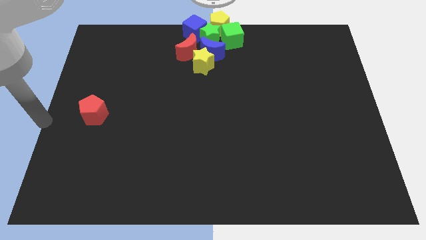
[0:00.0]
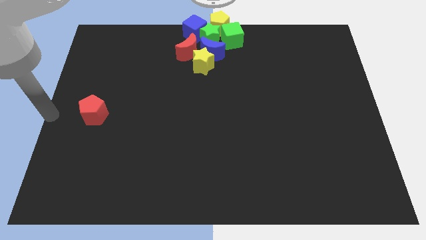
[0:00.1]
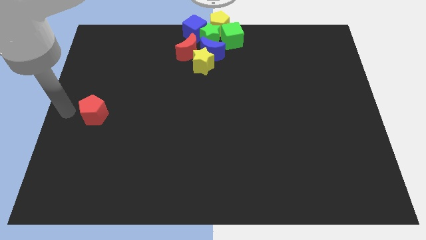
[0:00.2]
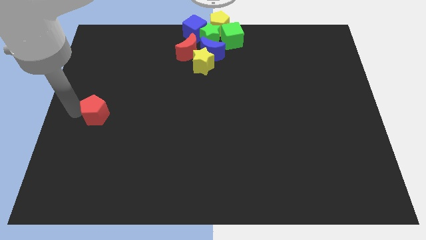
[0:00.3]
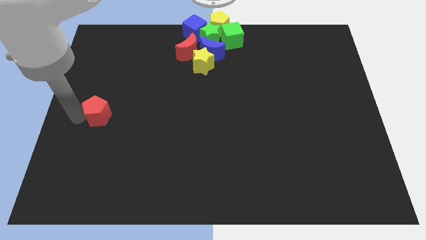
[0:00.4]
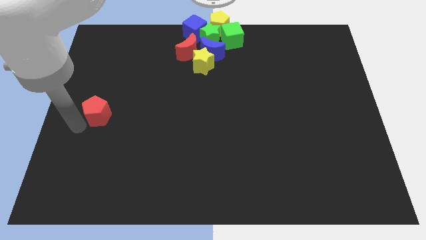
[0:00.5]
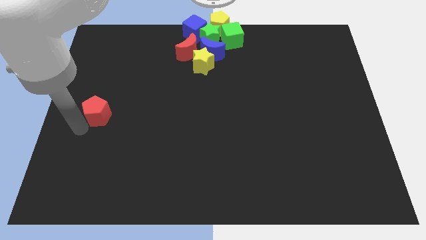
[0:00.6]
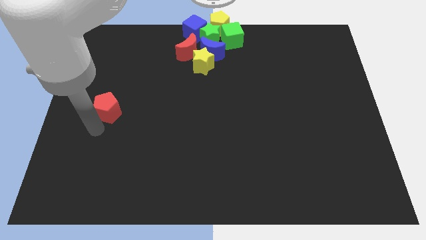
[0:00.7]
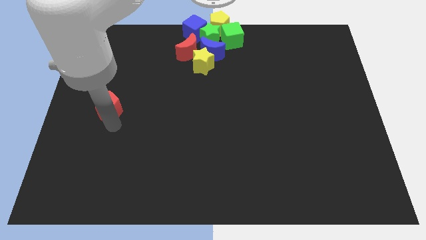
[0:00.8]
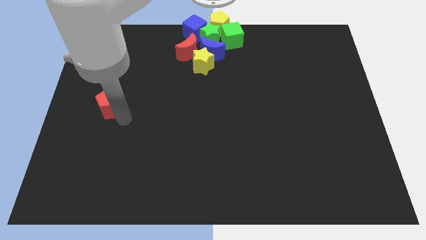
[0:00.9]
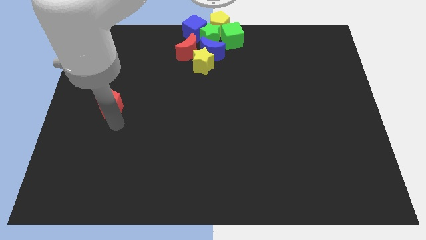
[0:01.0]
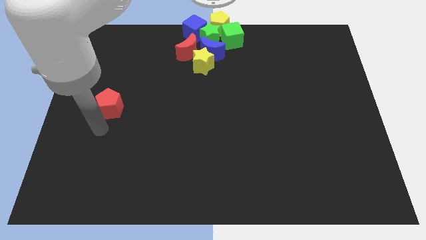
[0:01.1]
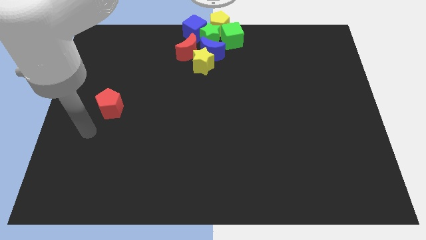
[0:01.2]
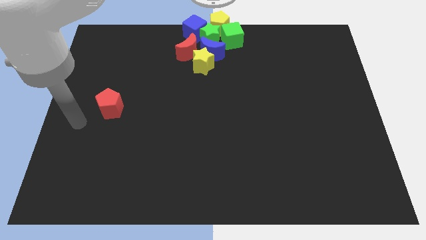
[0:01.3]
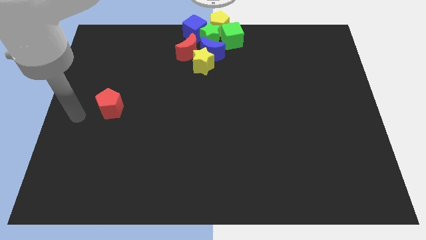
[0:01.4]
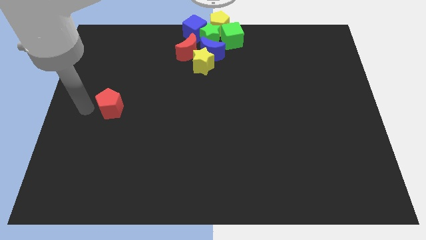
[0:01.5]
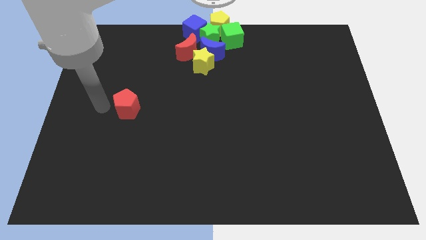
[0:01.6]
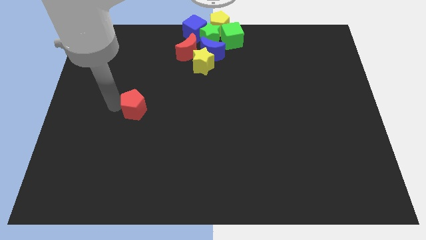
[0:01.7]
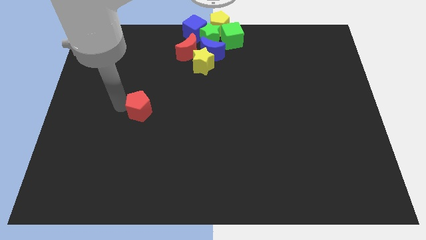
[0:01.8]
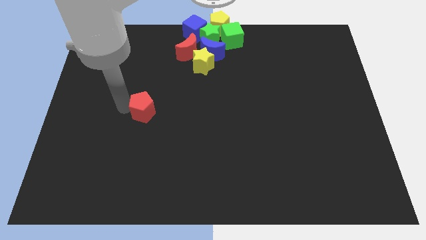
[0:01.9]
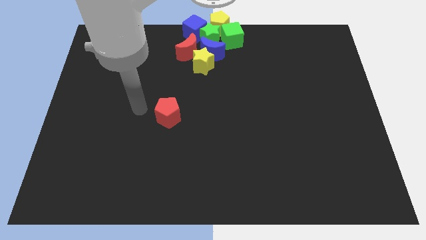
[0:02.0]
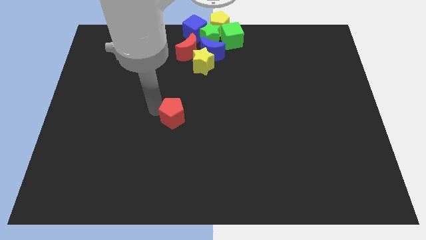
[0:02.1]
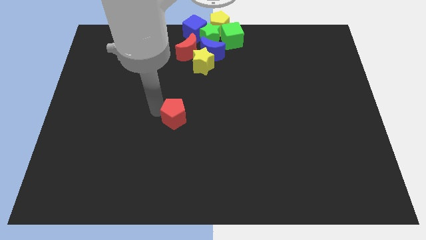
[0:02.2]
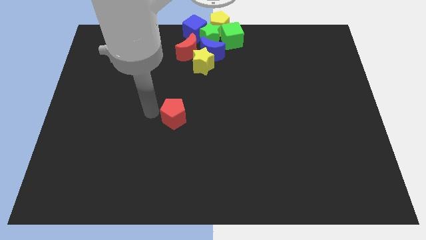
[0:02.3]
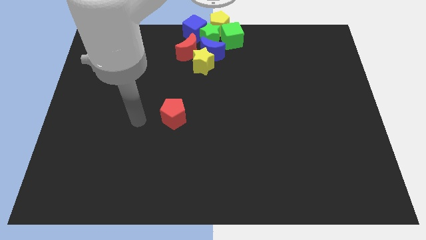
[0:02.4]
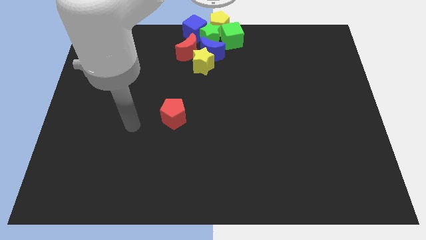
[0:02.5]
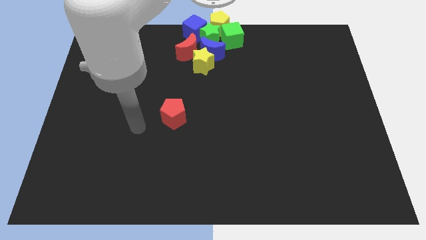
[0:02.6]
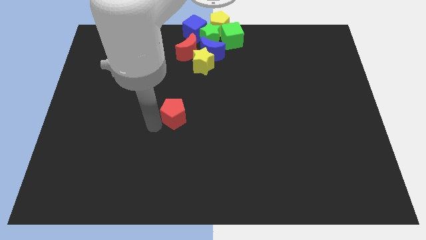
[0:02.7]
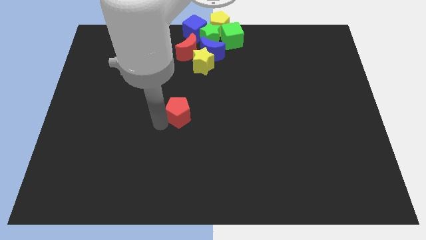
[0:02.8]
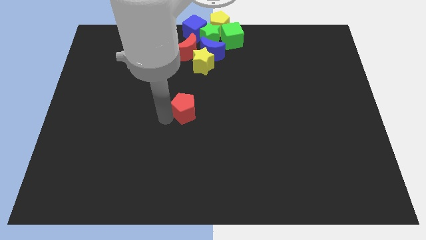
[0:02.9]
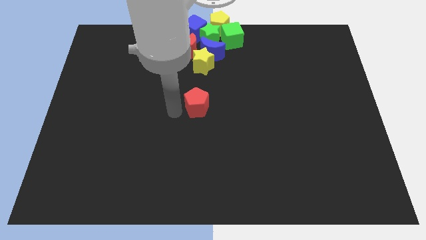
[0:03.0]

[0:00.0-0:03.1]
move the red pentagon to the center of the board

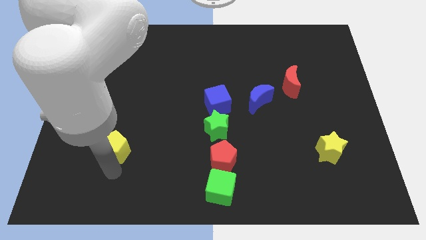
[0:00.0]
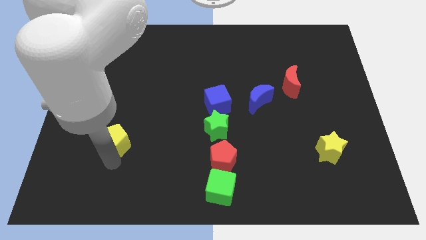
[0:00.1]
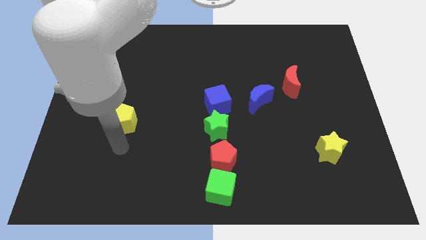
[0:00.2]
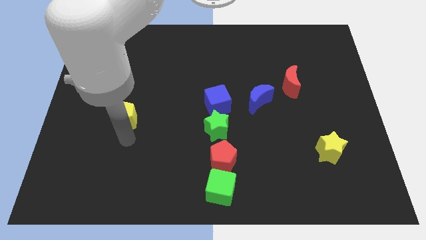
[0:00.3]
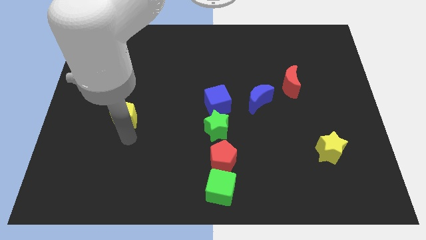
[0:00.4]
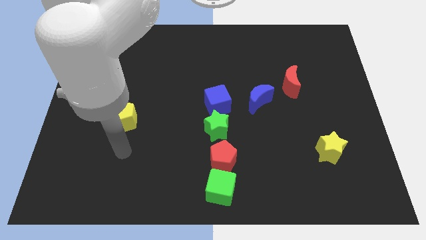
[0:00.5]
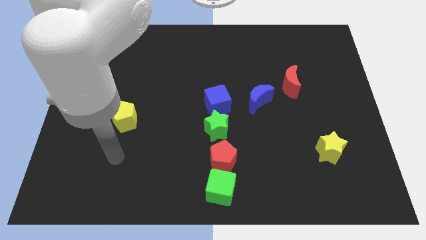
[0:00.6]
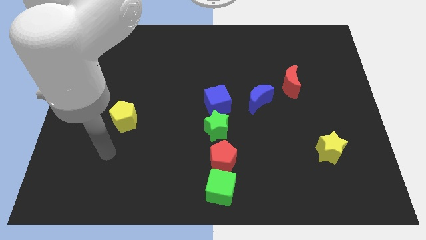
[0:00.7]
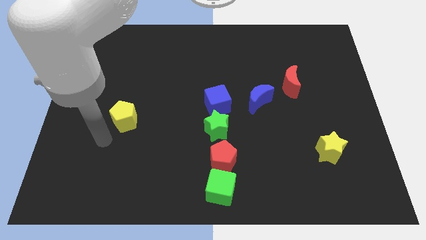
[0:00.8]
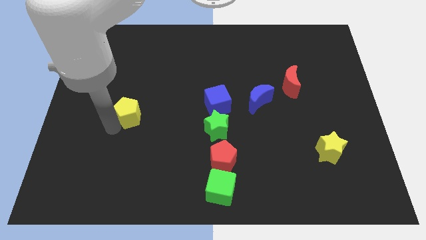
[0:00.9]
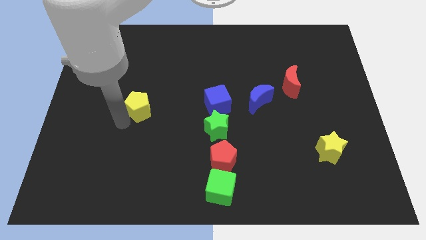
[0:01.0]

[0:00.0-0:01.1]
place yellow pentagon to the left of the blue cube

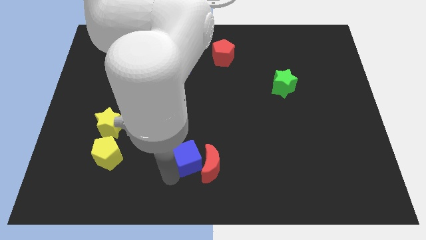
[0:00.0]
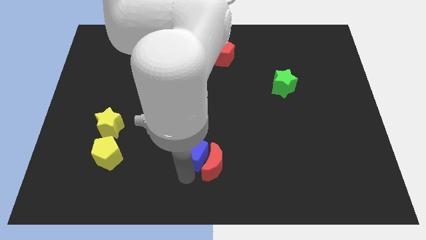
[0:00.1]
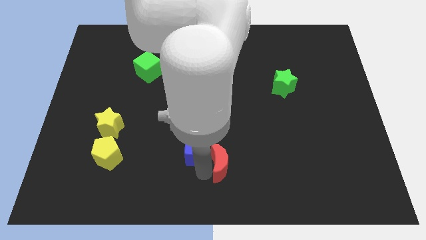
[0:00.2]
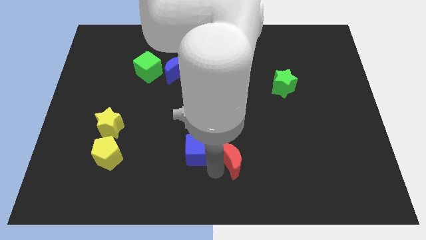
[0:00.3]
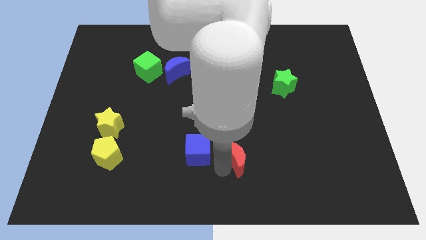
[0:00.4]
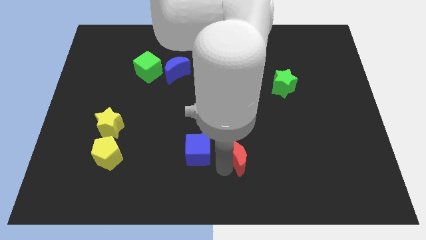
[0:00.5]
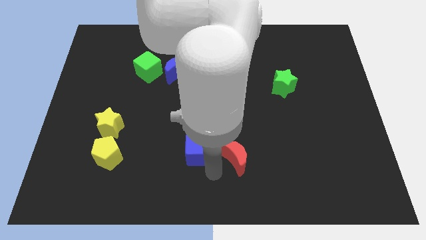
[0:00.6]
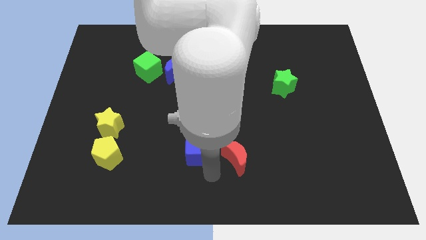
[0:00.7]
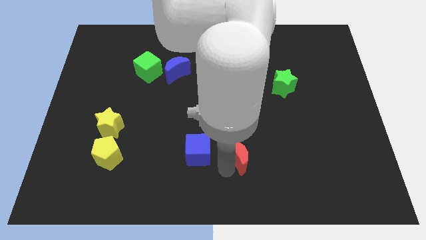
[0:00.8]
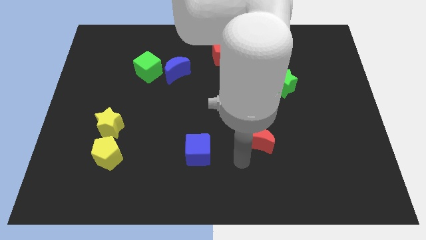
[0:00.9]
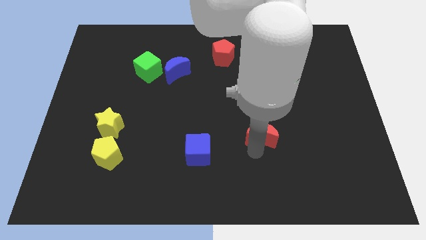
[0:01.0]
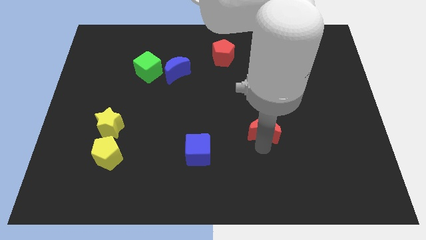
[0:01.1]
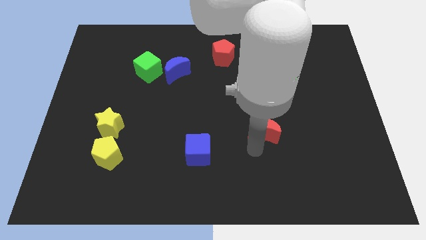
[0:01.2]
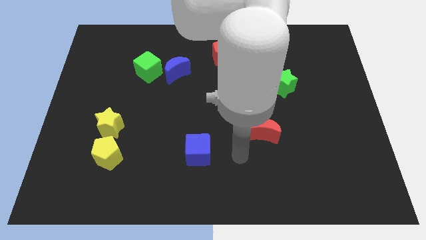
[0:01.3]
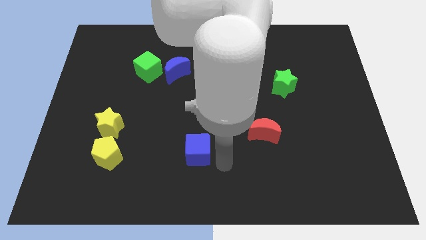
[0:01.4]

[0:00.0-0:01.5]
move the red crescent diagonally top right to the blue cube

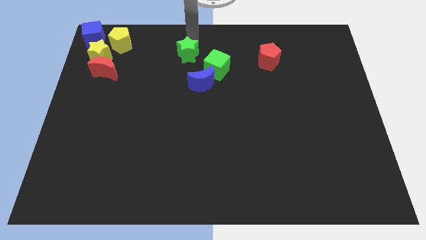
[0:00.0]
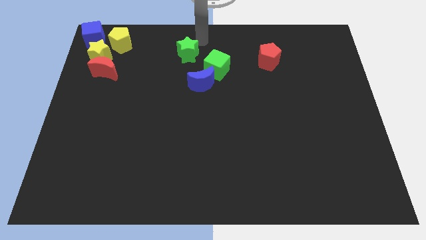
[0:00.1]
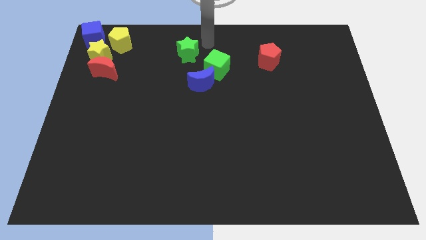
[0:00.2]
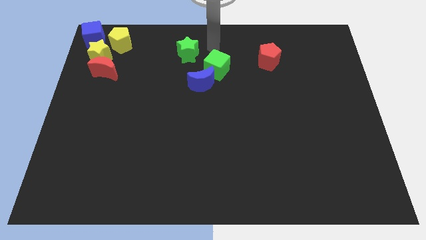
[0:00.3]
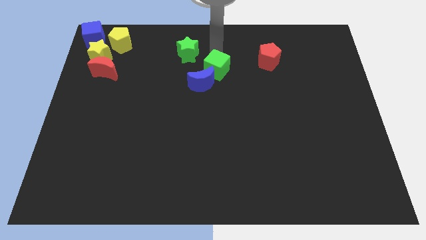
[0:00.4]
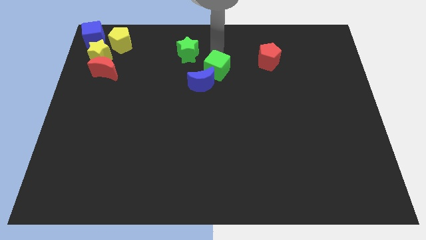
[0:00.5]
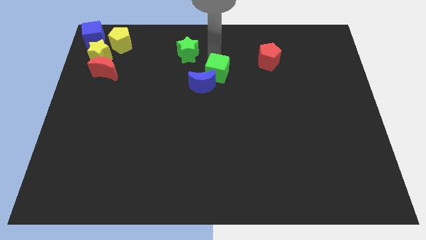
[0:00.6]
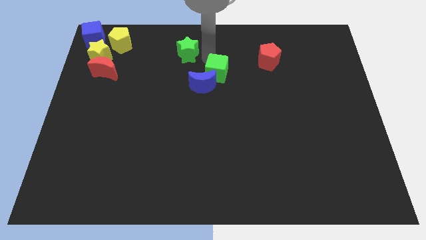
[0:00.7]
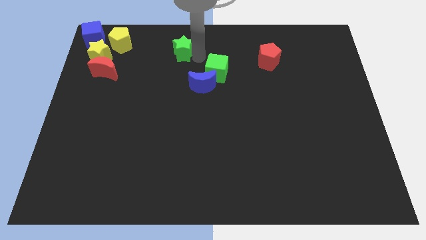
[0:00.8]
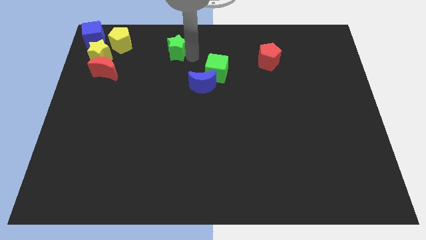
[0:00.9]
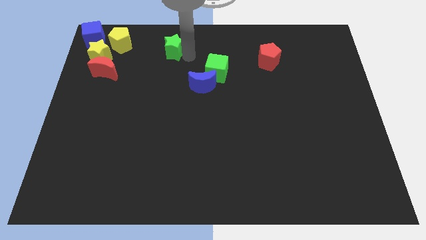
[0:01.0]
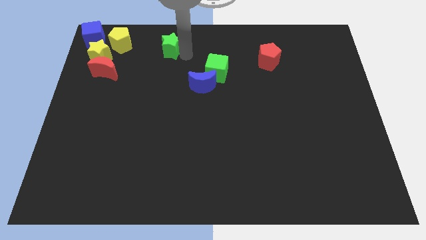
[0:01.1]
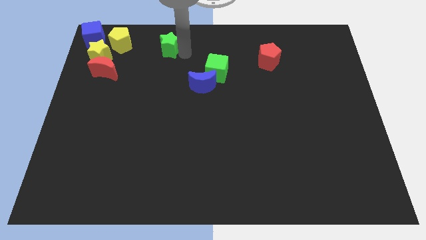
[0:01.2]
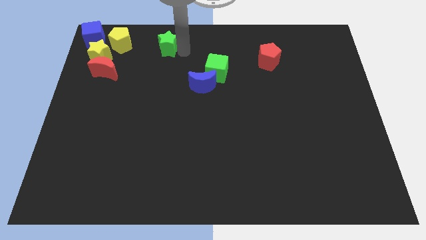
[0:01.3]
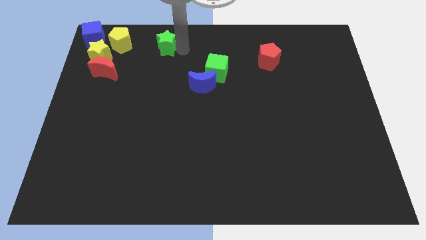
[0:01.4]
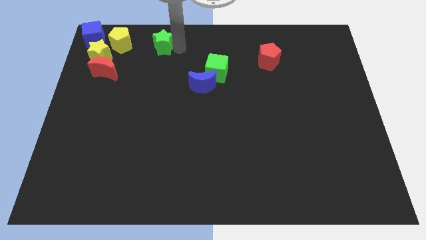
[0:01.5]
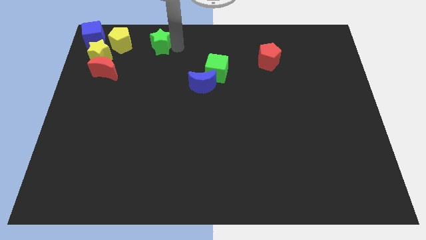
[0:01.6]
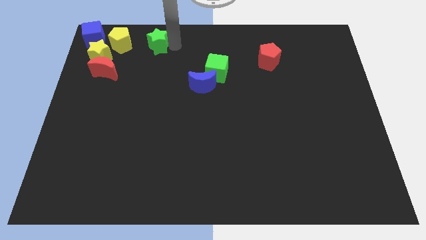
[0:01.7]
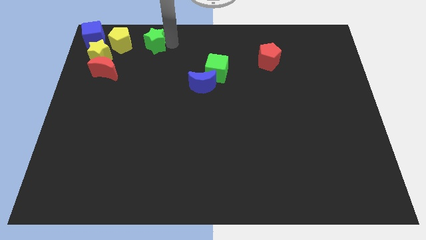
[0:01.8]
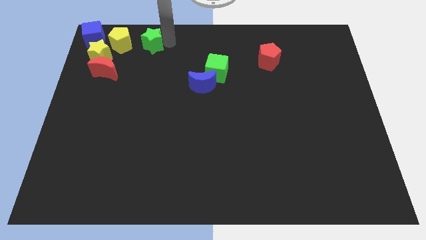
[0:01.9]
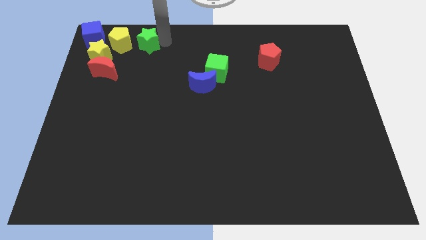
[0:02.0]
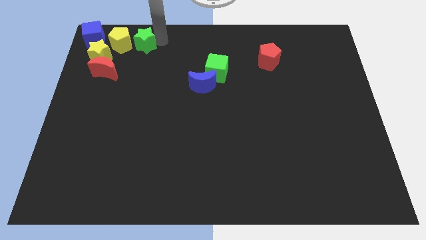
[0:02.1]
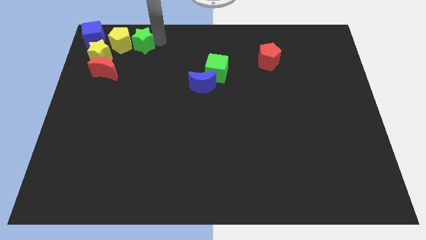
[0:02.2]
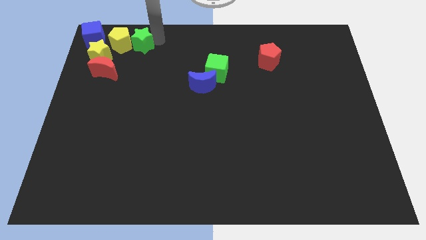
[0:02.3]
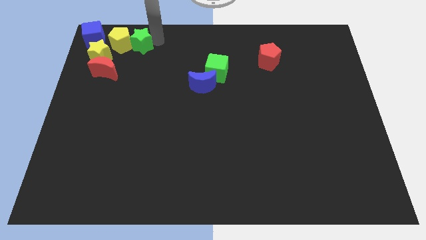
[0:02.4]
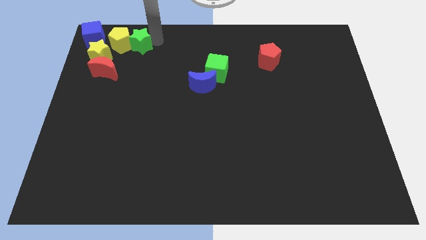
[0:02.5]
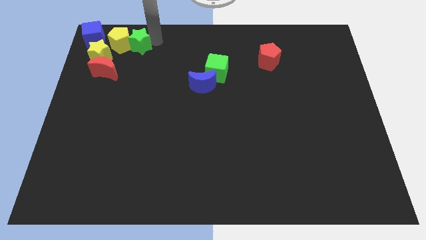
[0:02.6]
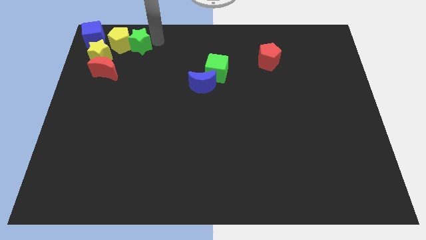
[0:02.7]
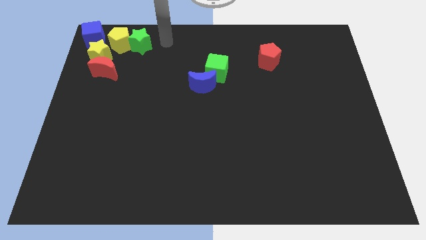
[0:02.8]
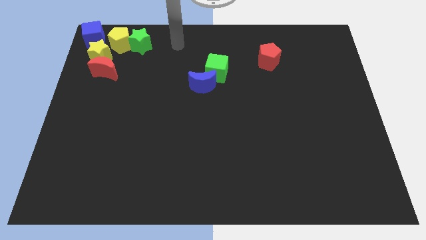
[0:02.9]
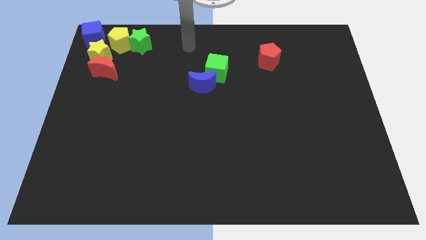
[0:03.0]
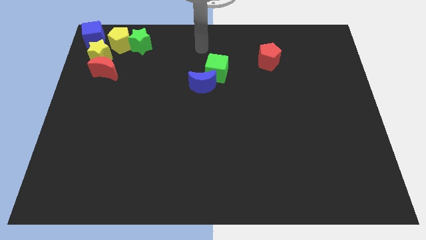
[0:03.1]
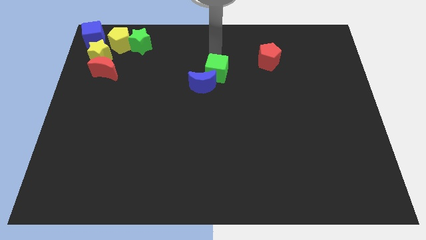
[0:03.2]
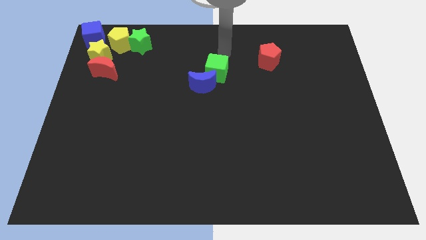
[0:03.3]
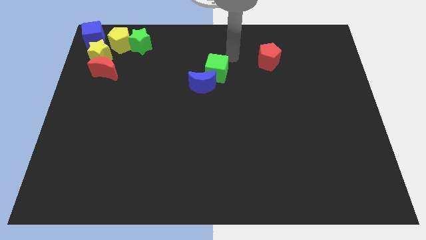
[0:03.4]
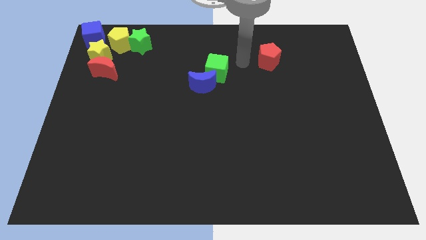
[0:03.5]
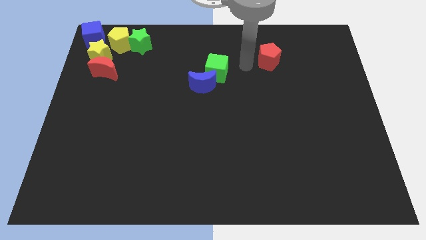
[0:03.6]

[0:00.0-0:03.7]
push green star in to yellow pentagon
